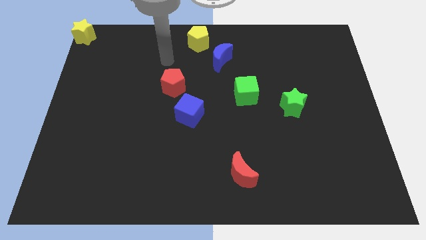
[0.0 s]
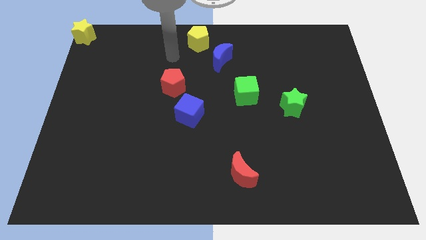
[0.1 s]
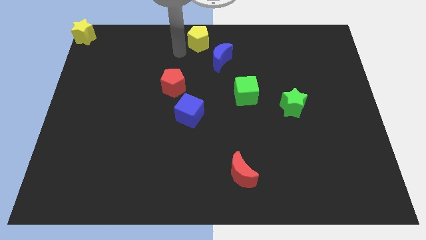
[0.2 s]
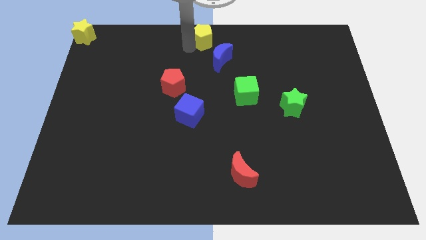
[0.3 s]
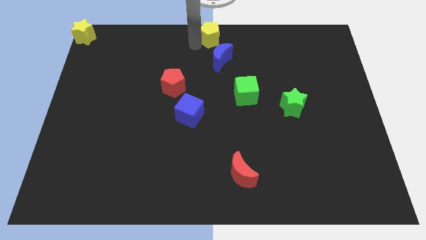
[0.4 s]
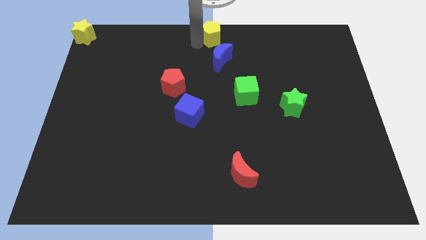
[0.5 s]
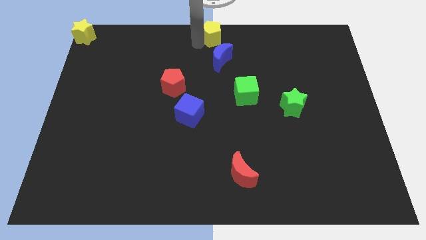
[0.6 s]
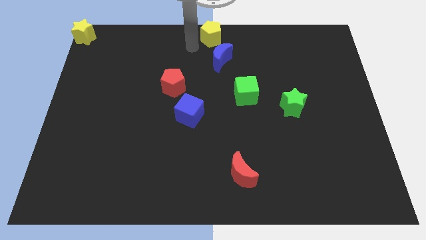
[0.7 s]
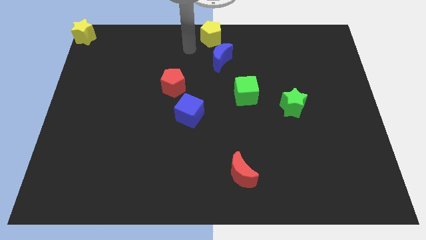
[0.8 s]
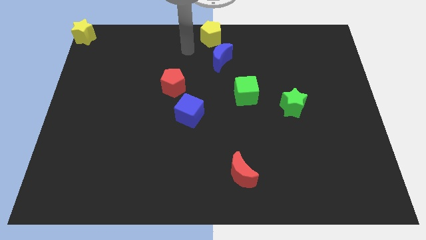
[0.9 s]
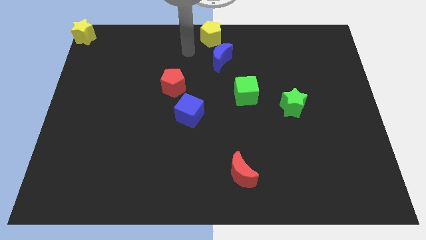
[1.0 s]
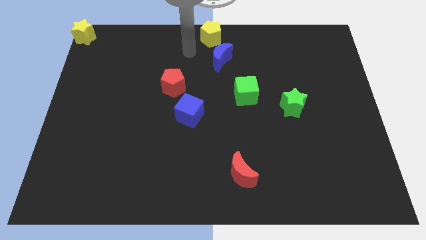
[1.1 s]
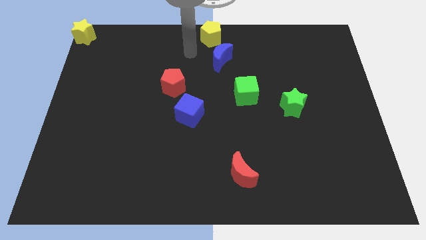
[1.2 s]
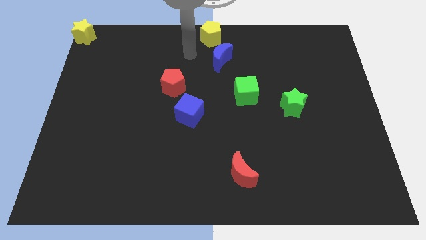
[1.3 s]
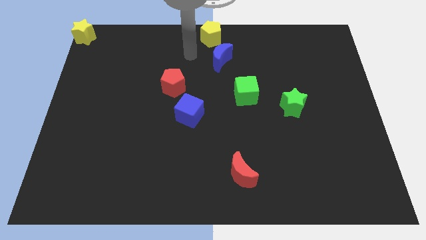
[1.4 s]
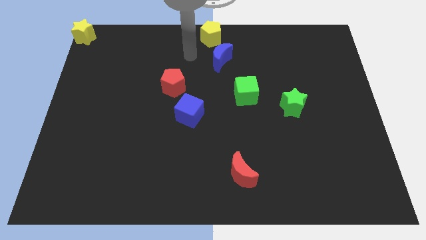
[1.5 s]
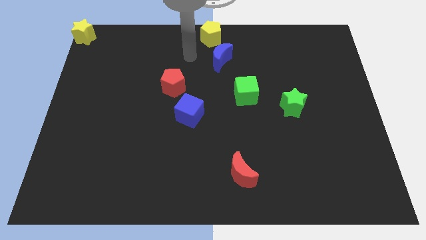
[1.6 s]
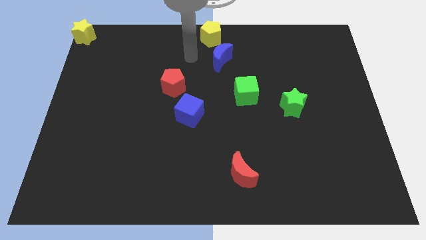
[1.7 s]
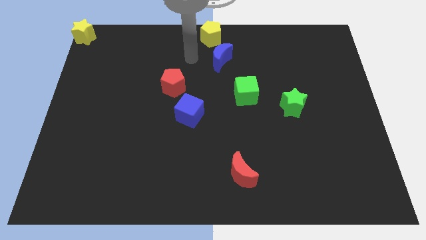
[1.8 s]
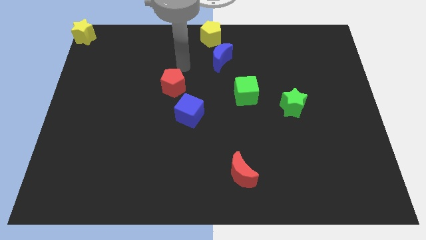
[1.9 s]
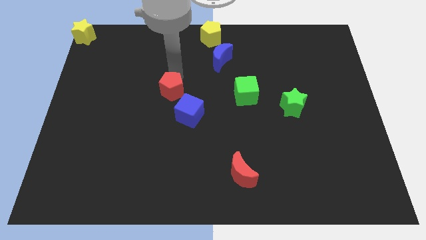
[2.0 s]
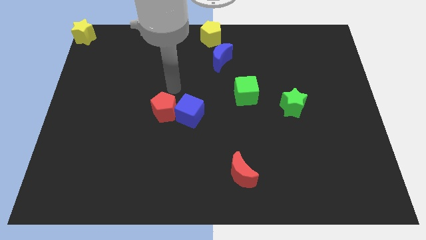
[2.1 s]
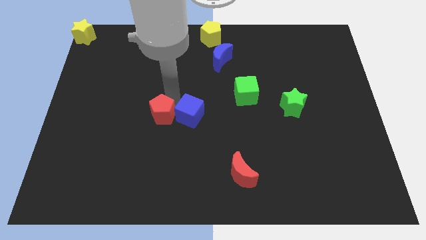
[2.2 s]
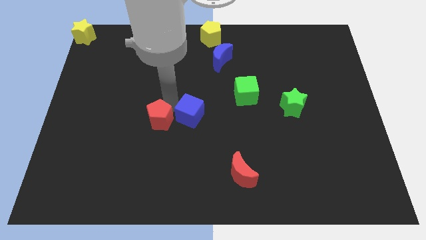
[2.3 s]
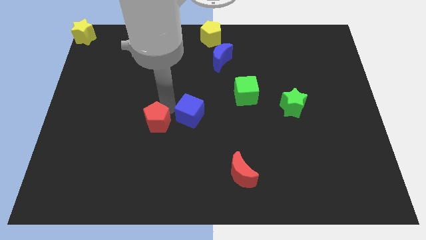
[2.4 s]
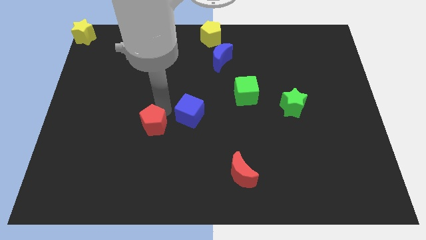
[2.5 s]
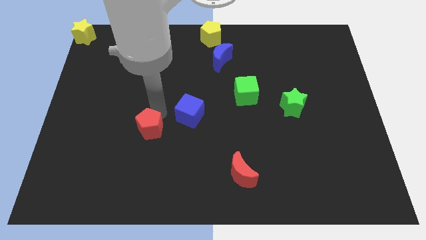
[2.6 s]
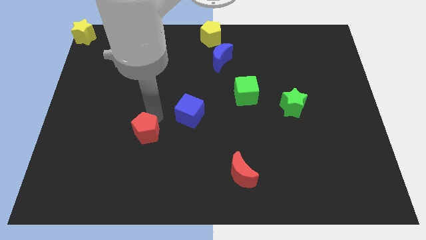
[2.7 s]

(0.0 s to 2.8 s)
push the red pentagon down slightly

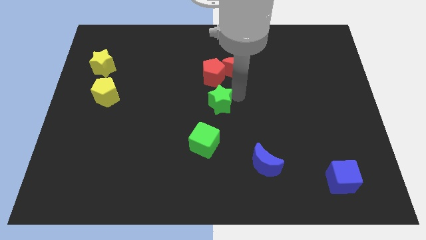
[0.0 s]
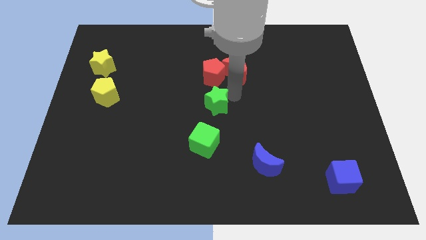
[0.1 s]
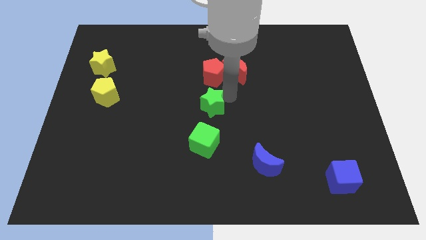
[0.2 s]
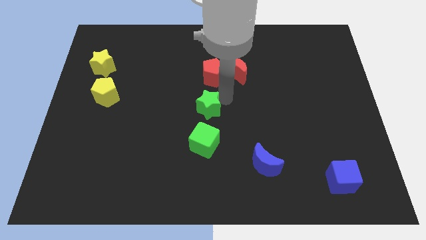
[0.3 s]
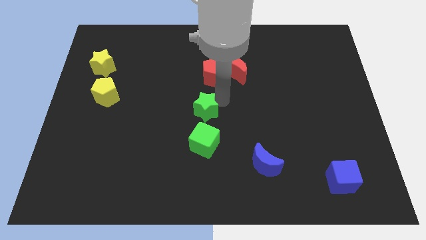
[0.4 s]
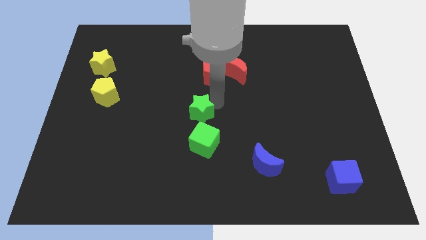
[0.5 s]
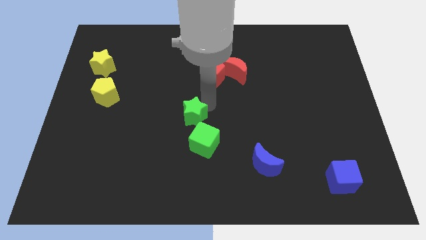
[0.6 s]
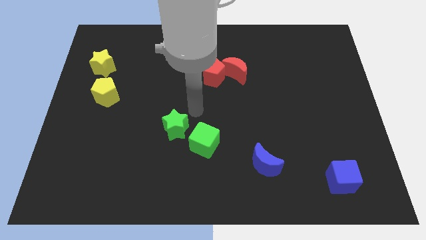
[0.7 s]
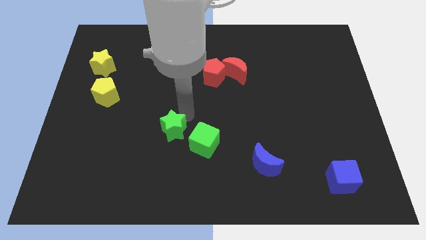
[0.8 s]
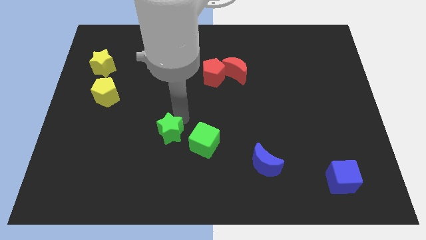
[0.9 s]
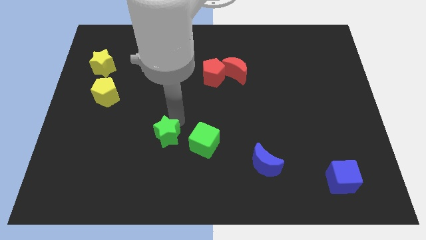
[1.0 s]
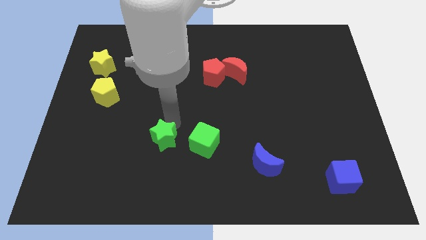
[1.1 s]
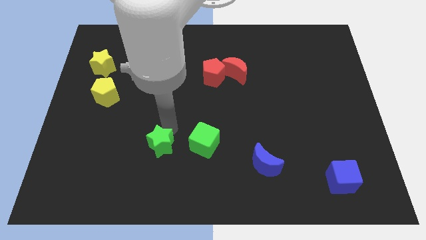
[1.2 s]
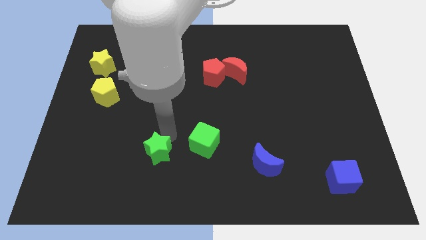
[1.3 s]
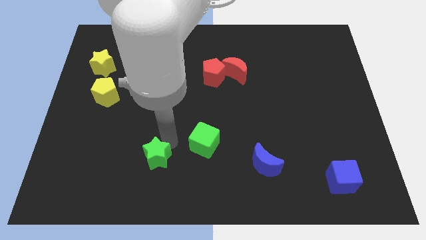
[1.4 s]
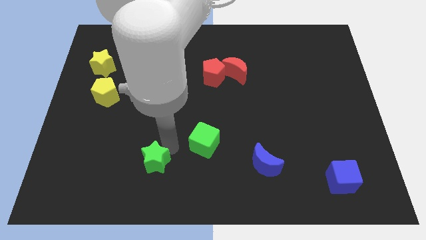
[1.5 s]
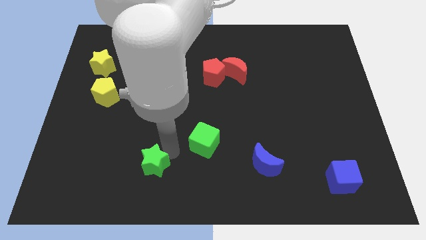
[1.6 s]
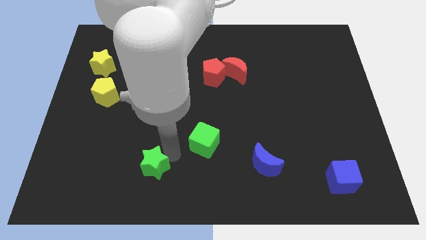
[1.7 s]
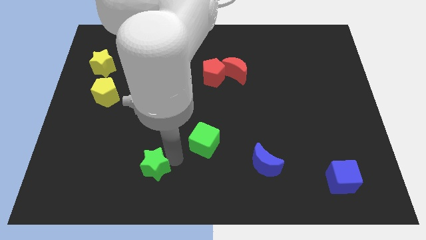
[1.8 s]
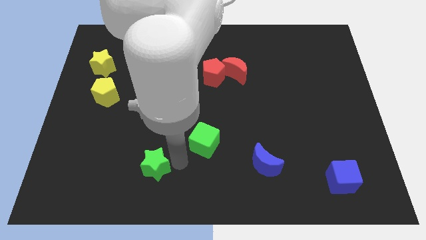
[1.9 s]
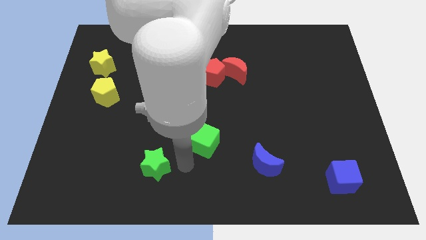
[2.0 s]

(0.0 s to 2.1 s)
put the green star at the bottom left of the green cube

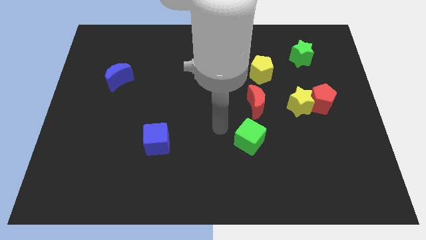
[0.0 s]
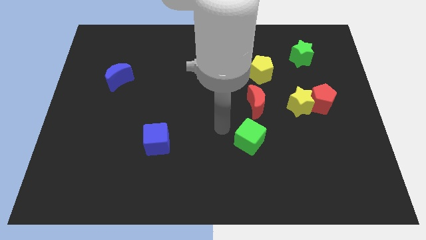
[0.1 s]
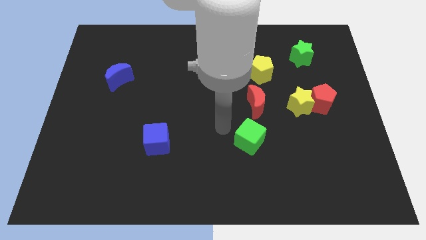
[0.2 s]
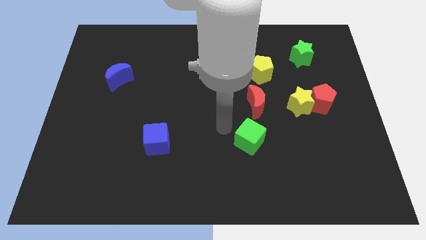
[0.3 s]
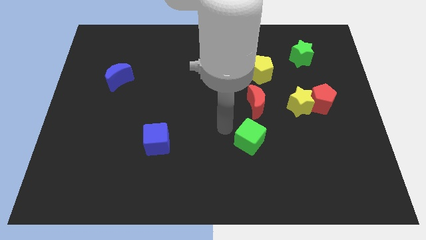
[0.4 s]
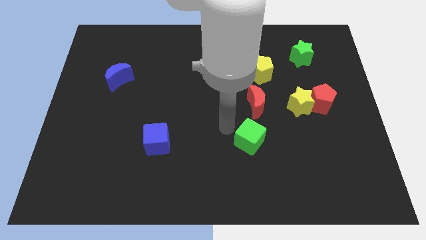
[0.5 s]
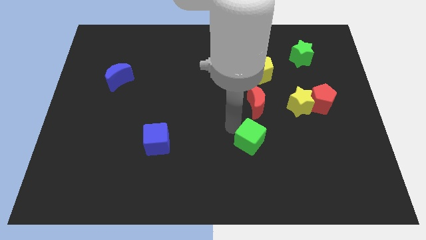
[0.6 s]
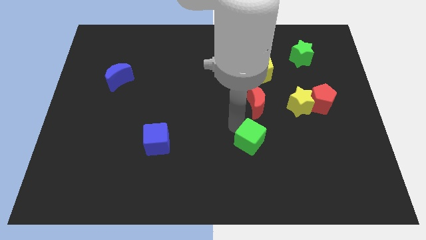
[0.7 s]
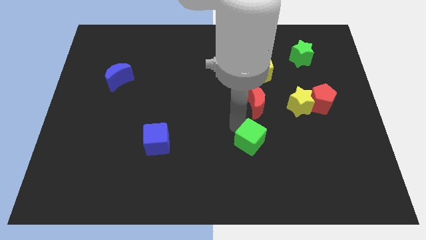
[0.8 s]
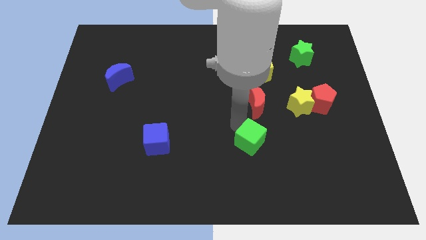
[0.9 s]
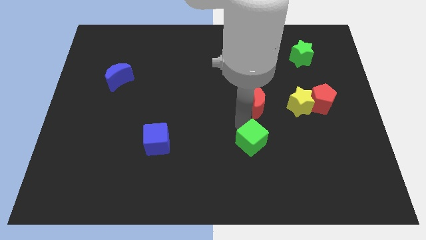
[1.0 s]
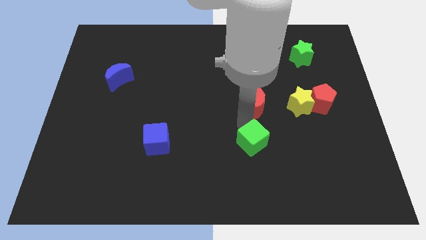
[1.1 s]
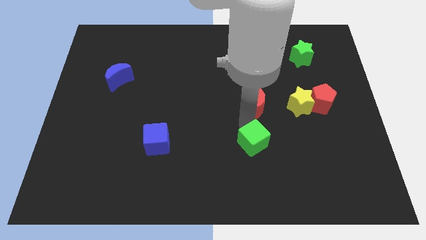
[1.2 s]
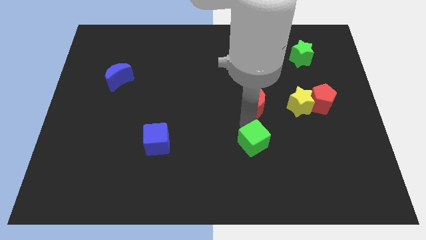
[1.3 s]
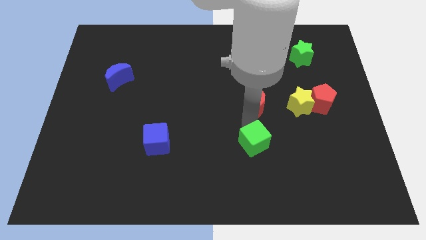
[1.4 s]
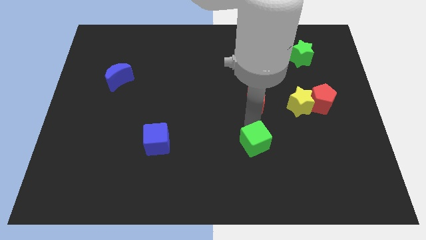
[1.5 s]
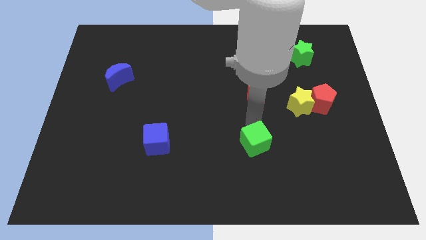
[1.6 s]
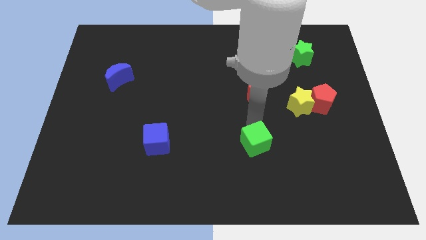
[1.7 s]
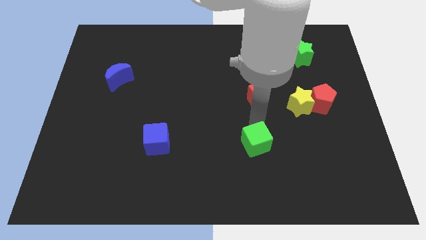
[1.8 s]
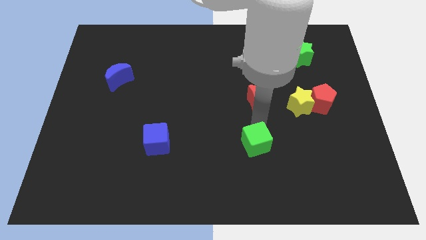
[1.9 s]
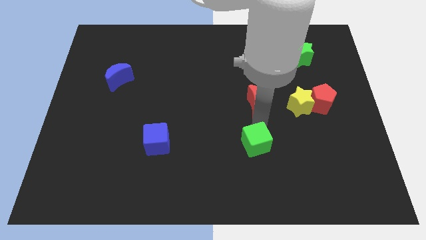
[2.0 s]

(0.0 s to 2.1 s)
push the green cube slightly

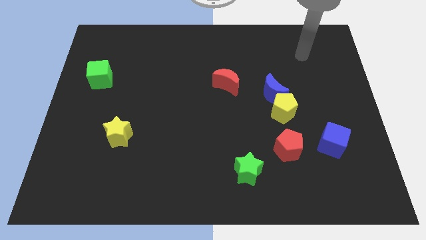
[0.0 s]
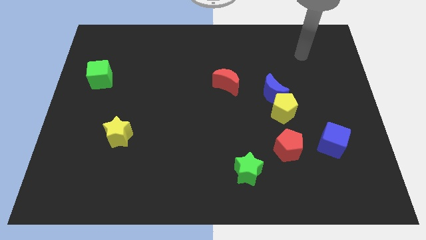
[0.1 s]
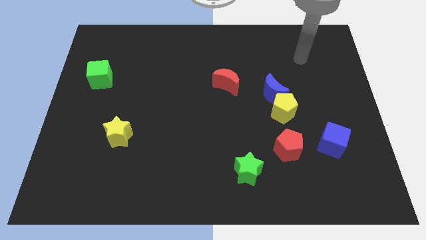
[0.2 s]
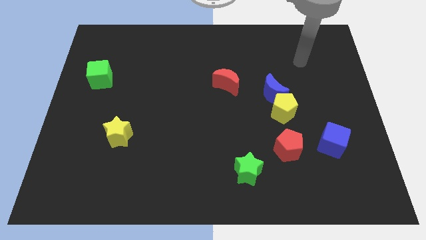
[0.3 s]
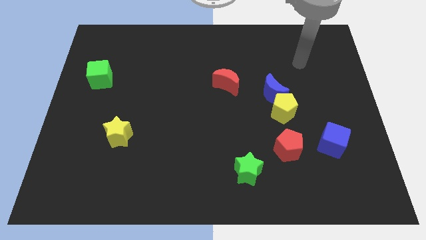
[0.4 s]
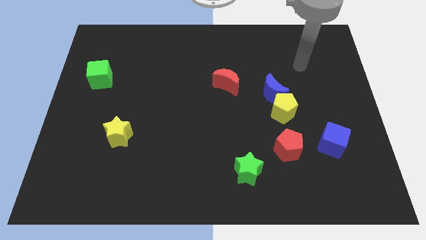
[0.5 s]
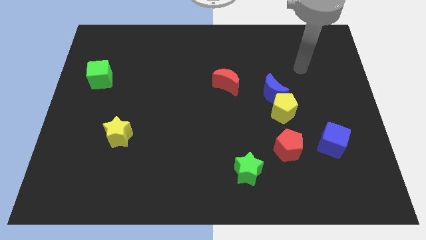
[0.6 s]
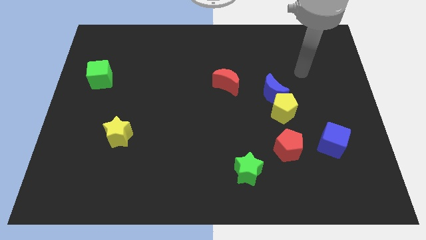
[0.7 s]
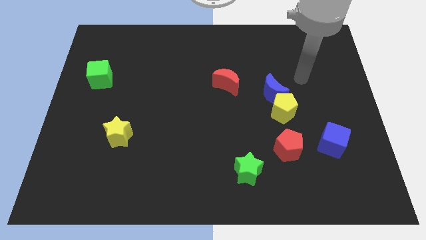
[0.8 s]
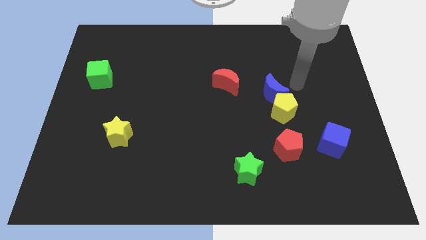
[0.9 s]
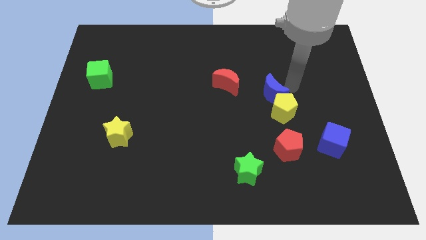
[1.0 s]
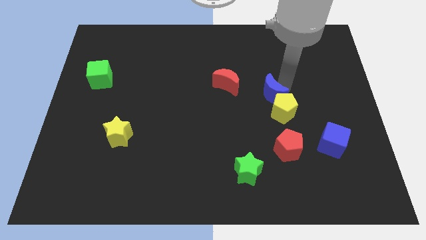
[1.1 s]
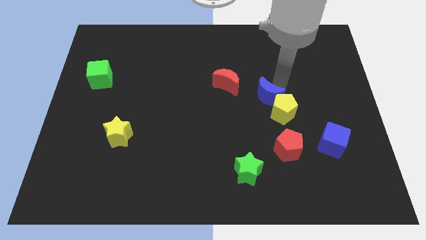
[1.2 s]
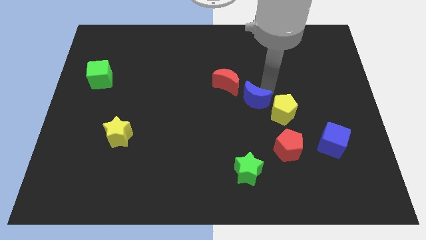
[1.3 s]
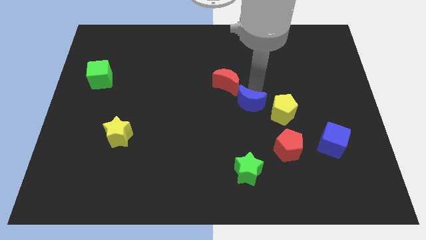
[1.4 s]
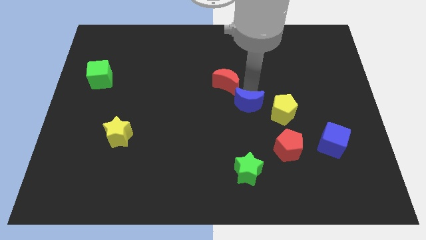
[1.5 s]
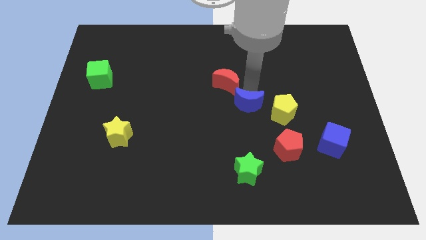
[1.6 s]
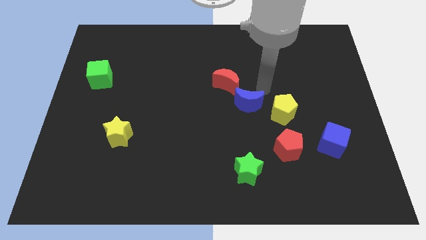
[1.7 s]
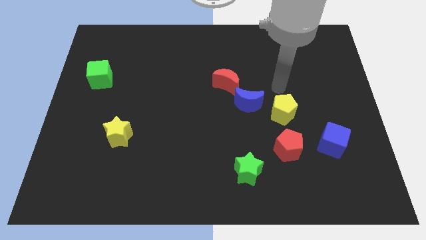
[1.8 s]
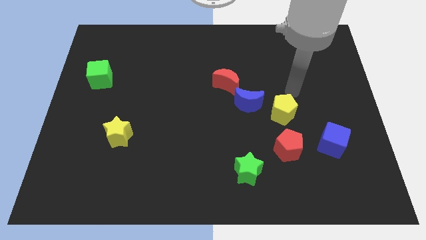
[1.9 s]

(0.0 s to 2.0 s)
put the blue crescent at the bottom right of the red moon
